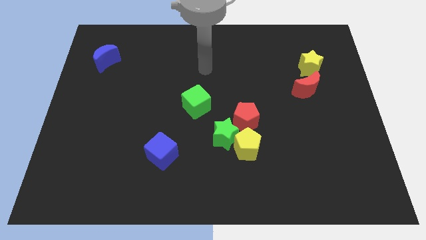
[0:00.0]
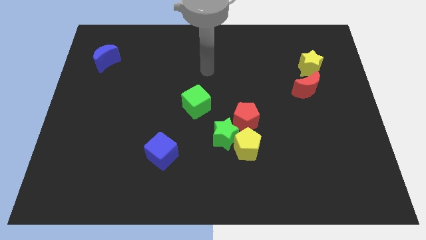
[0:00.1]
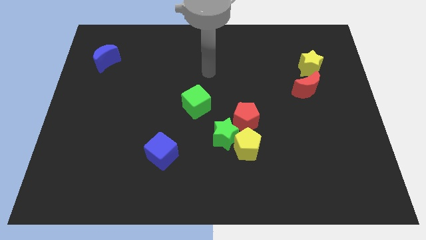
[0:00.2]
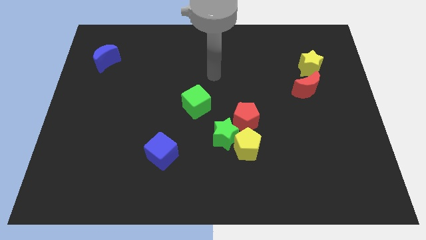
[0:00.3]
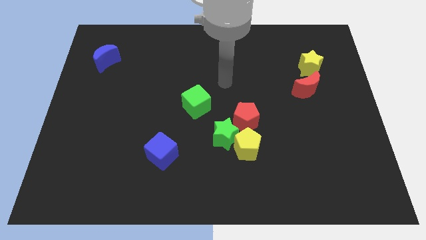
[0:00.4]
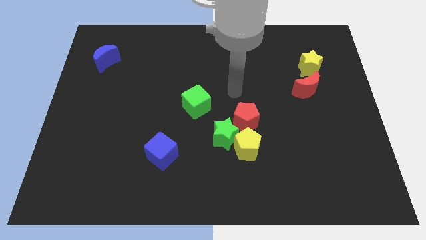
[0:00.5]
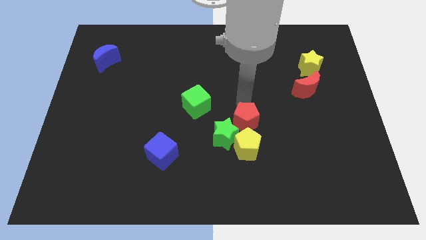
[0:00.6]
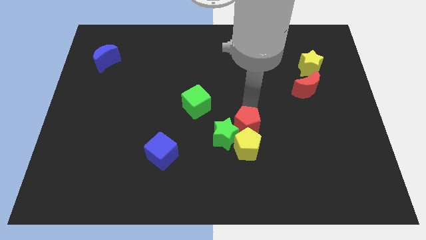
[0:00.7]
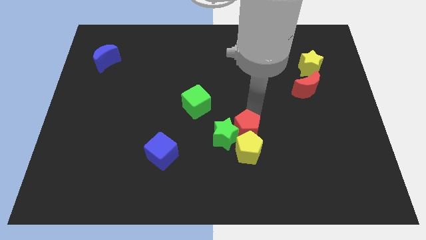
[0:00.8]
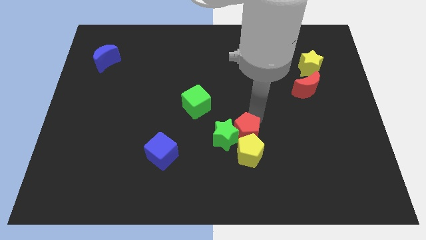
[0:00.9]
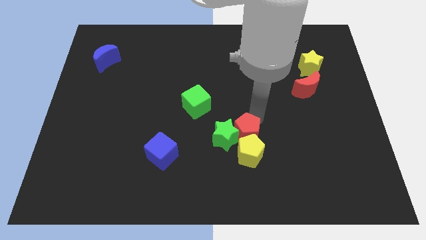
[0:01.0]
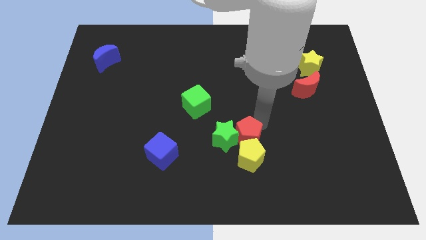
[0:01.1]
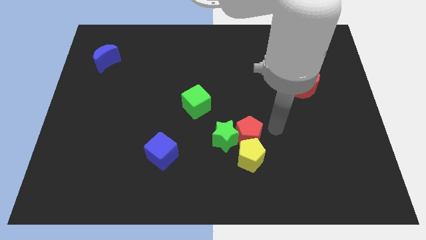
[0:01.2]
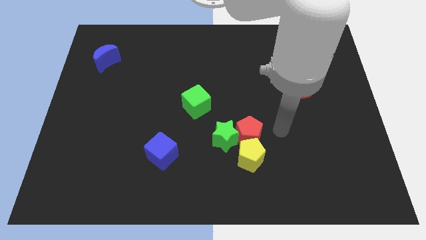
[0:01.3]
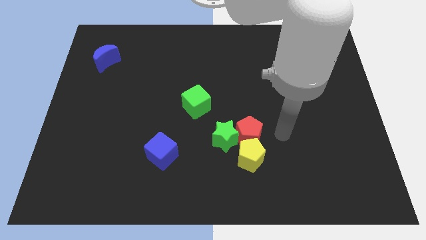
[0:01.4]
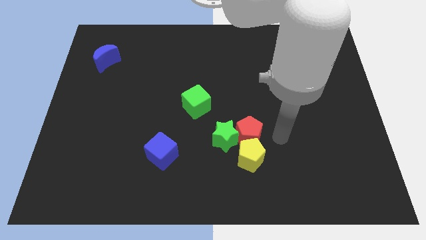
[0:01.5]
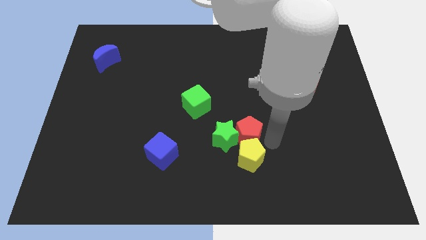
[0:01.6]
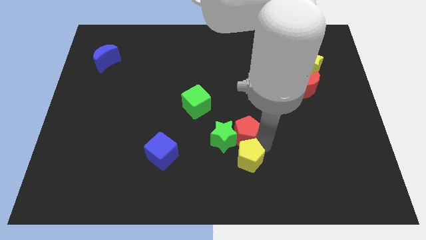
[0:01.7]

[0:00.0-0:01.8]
push the red pentagon towards right of the green star

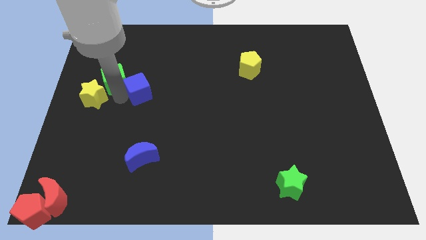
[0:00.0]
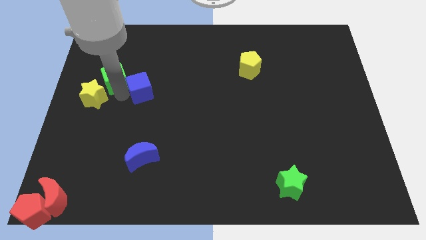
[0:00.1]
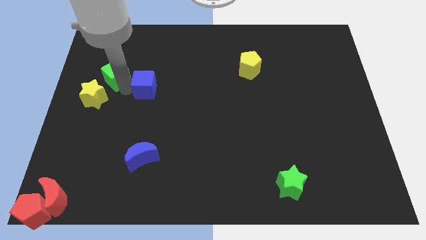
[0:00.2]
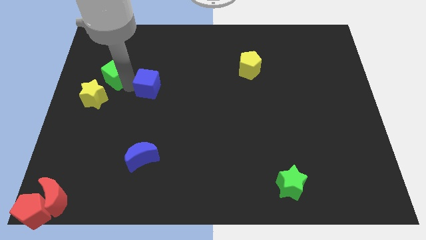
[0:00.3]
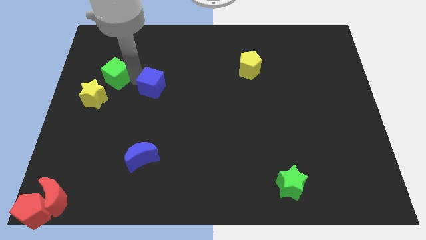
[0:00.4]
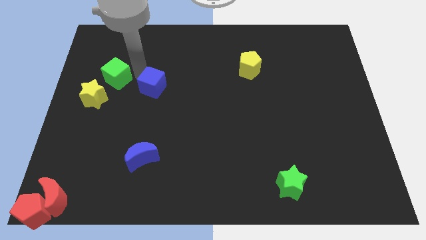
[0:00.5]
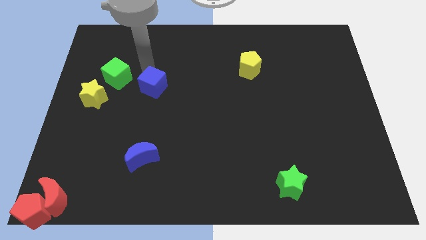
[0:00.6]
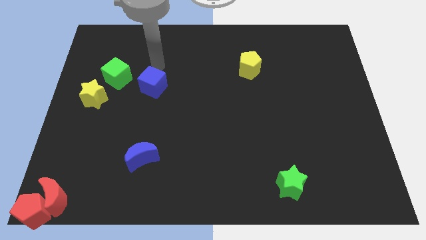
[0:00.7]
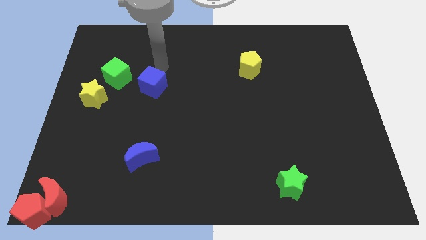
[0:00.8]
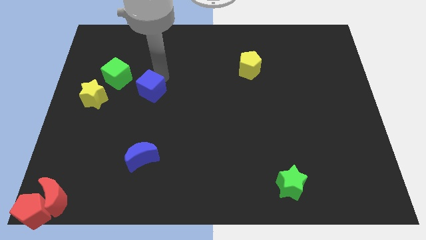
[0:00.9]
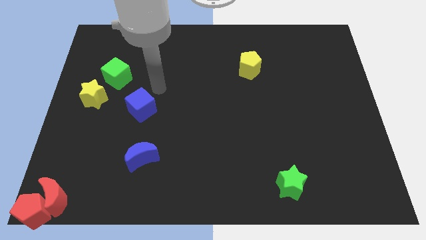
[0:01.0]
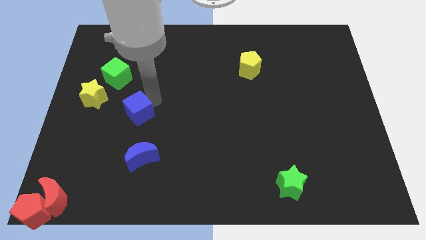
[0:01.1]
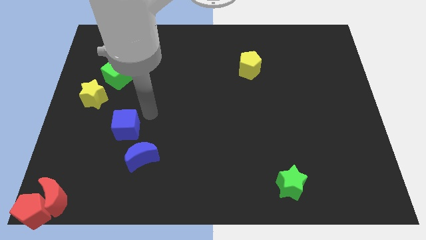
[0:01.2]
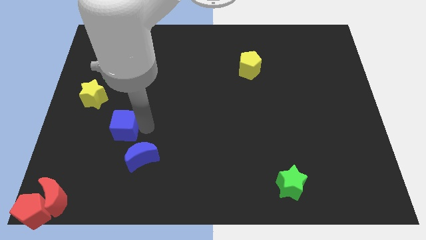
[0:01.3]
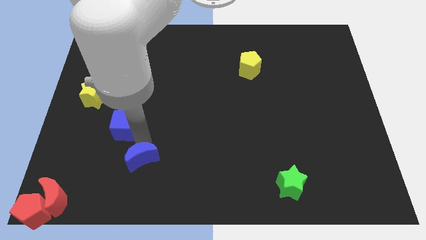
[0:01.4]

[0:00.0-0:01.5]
separate blue cube and the green cube

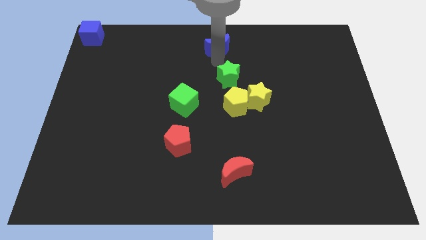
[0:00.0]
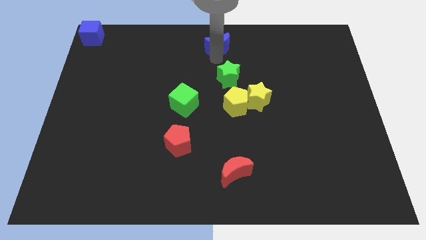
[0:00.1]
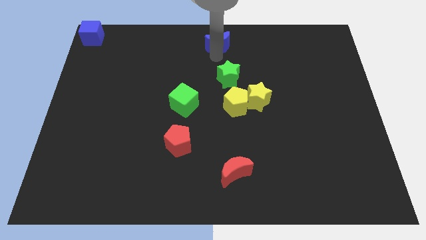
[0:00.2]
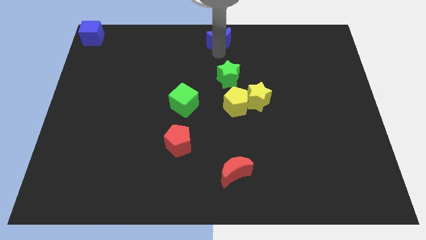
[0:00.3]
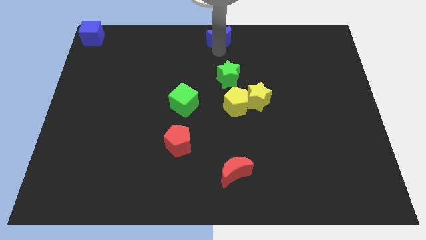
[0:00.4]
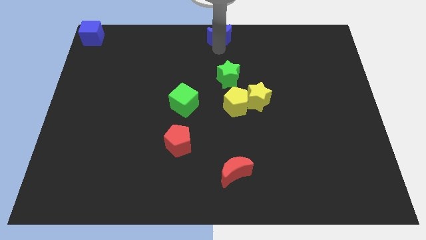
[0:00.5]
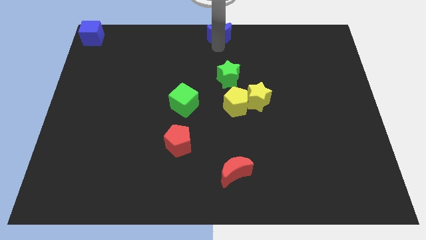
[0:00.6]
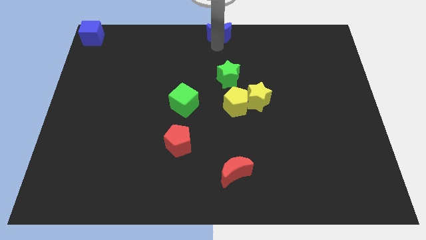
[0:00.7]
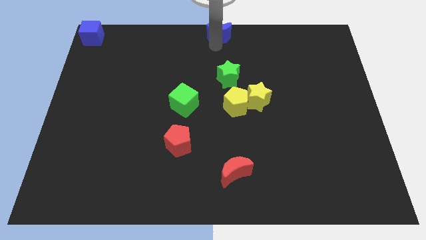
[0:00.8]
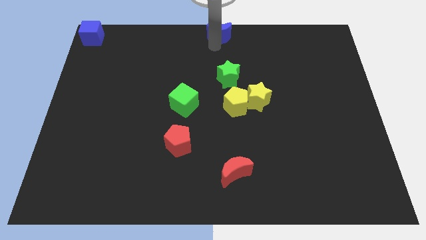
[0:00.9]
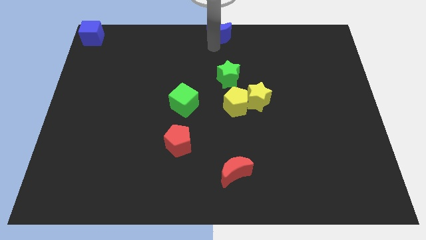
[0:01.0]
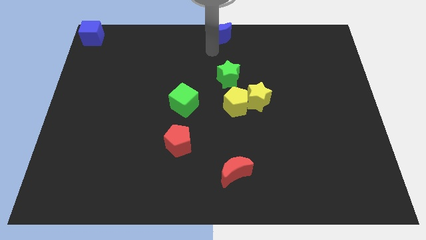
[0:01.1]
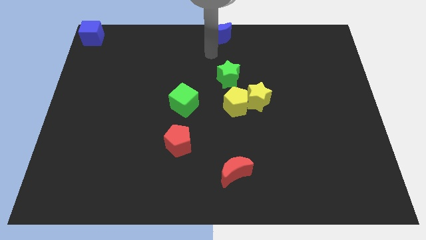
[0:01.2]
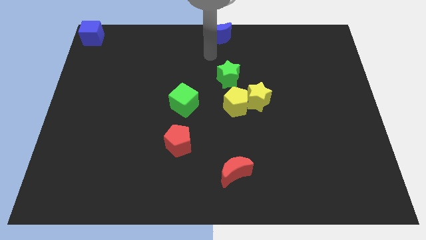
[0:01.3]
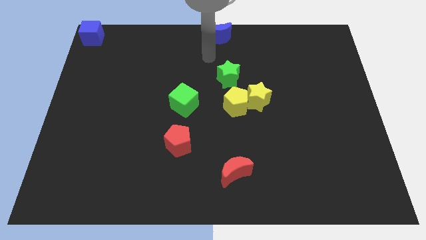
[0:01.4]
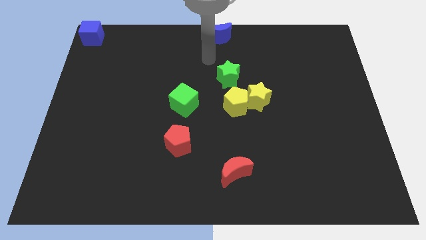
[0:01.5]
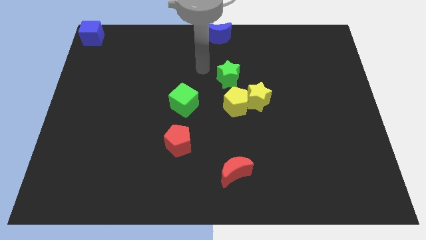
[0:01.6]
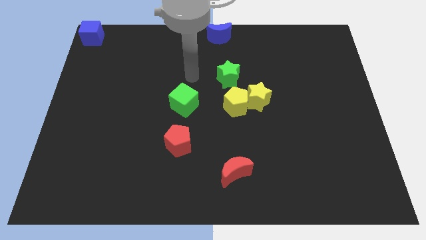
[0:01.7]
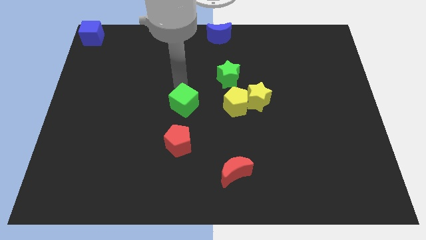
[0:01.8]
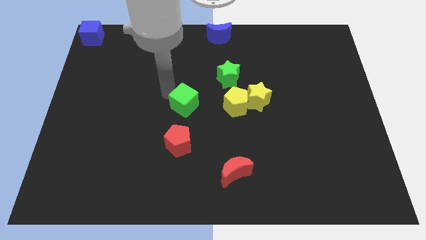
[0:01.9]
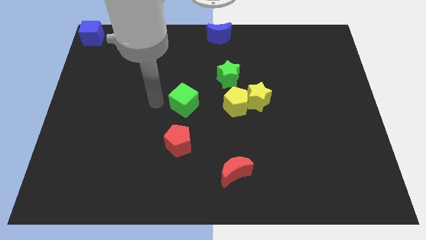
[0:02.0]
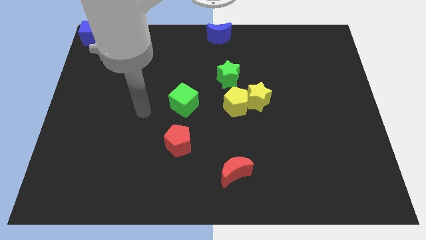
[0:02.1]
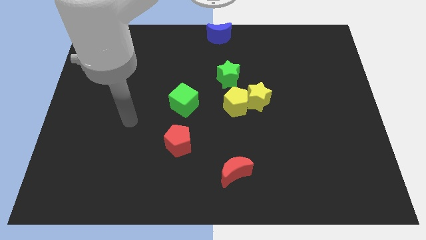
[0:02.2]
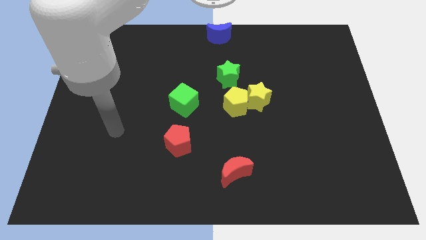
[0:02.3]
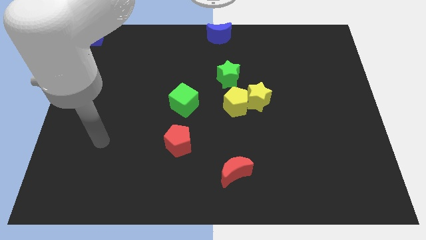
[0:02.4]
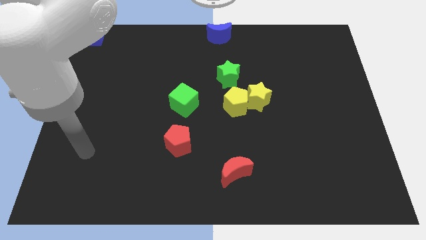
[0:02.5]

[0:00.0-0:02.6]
place the blue moon to the top center of the board

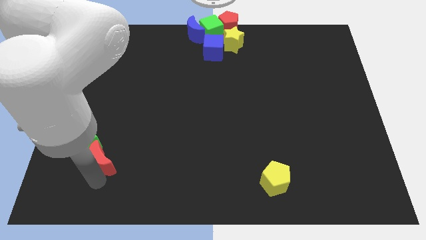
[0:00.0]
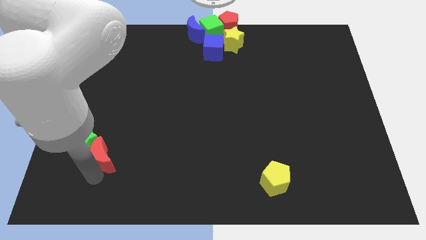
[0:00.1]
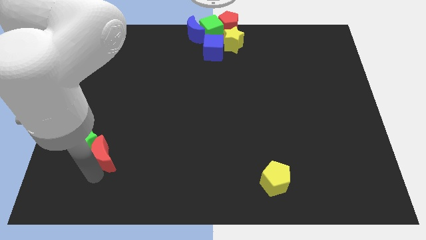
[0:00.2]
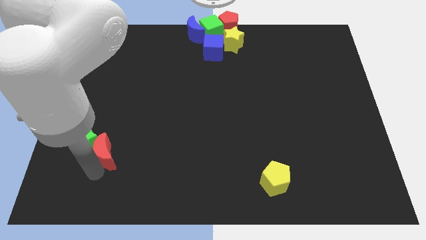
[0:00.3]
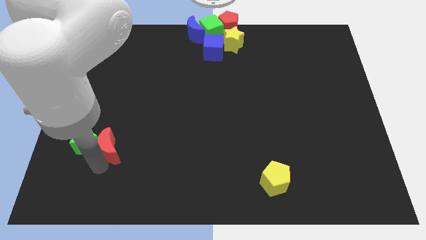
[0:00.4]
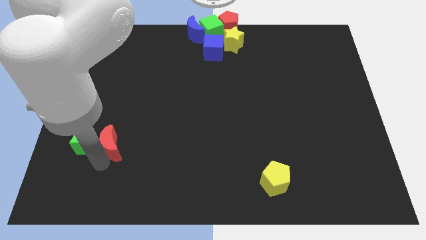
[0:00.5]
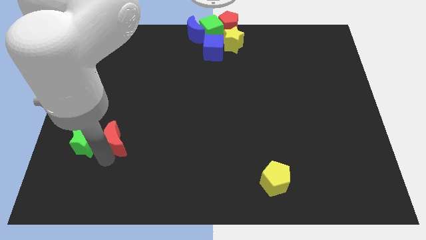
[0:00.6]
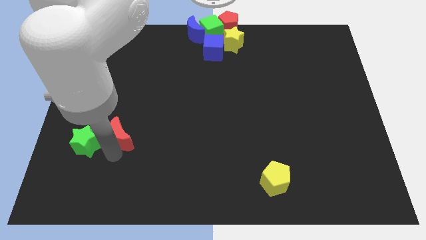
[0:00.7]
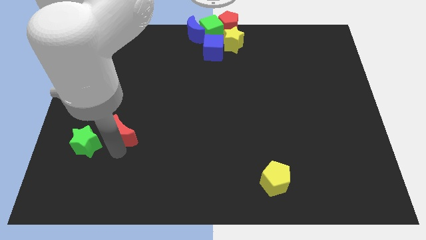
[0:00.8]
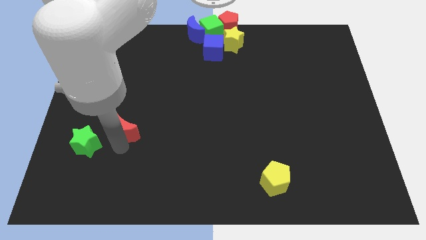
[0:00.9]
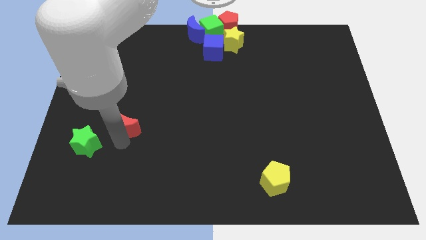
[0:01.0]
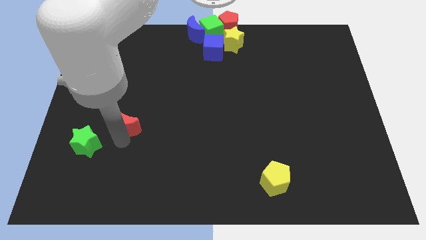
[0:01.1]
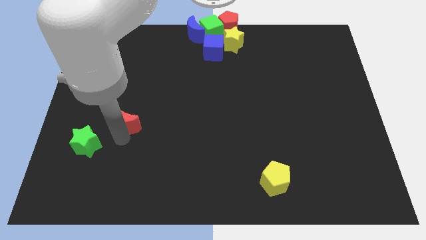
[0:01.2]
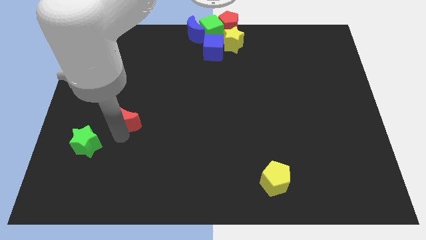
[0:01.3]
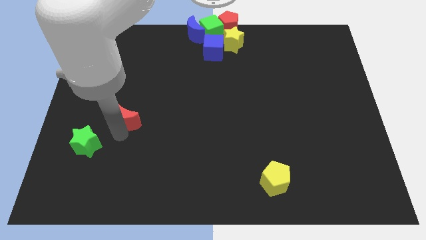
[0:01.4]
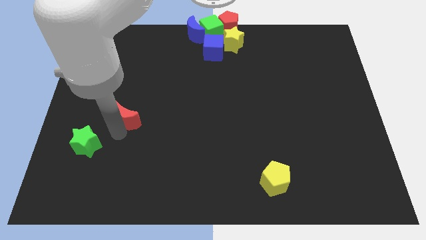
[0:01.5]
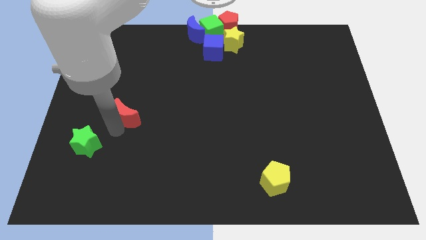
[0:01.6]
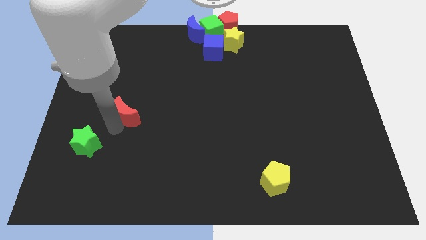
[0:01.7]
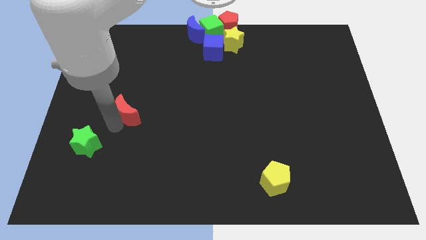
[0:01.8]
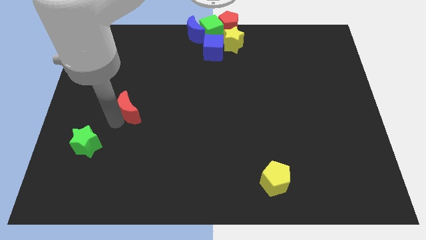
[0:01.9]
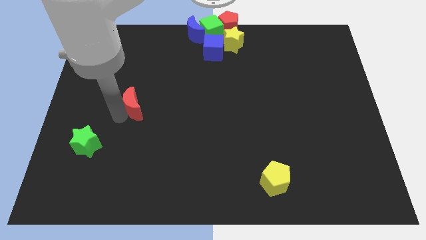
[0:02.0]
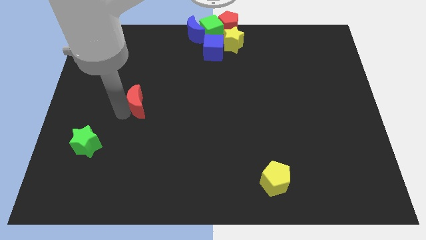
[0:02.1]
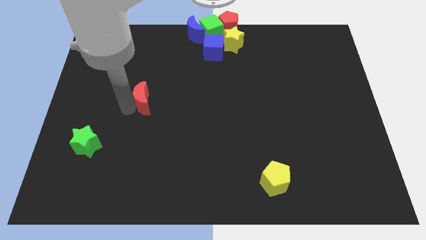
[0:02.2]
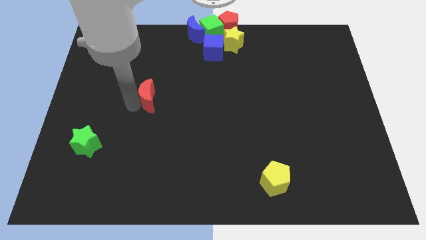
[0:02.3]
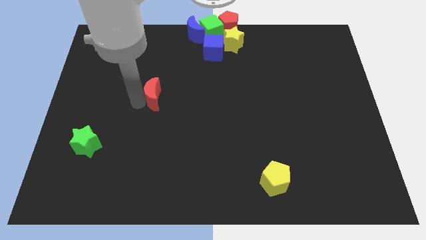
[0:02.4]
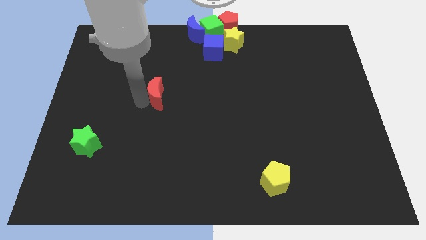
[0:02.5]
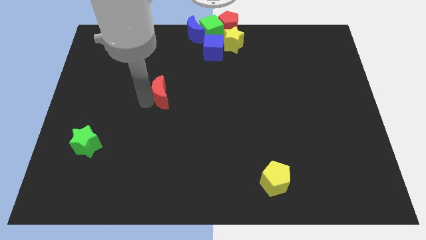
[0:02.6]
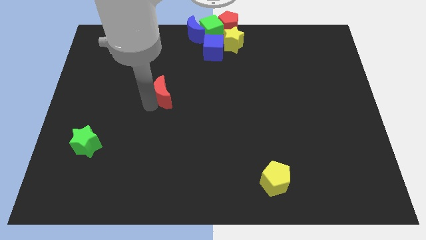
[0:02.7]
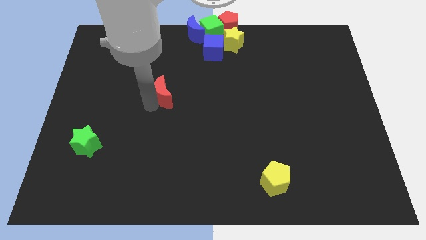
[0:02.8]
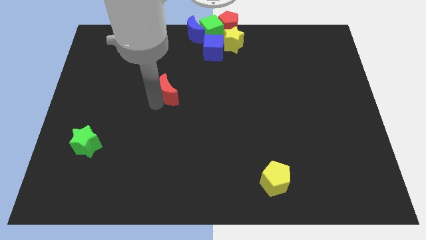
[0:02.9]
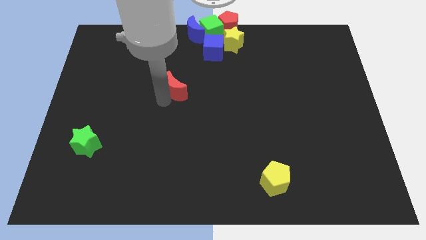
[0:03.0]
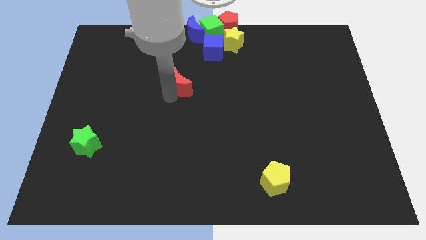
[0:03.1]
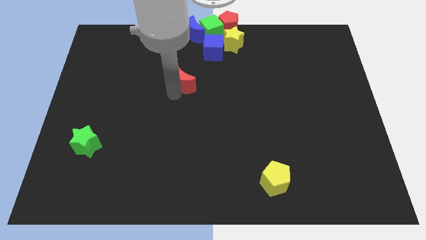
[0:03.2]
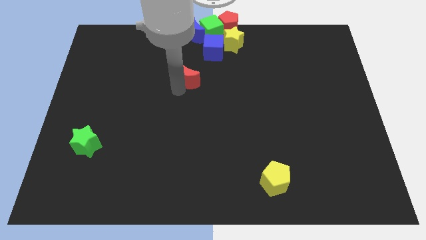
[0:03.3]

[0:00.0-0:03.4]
place the red moon diagonally bottom left to the blue cube
